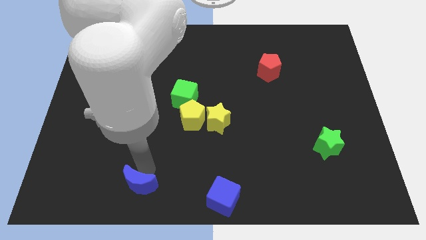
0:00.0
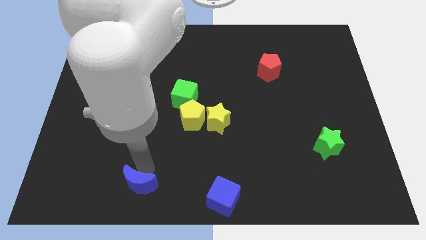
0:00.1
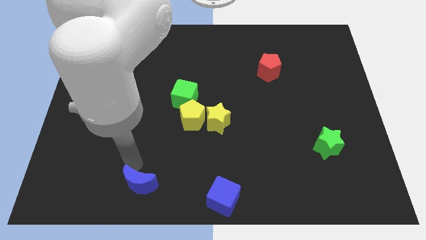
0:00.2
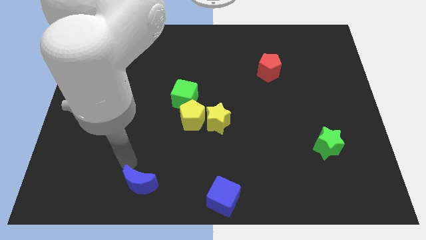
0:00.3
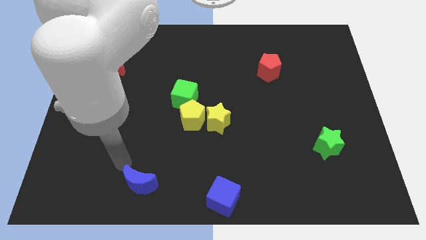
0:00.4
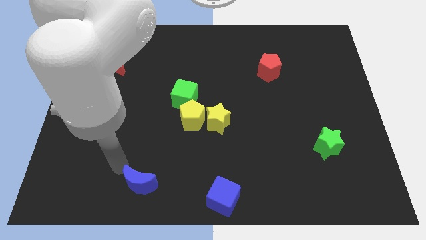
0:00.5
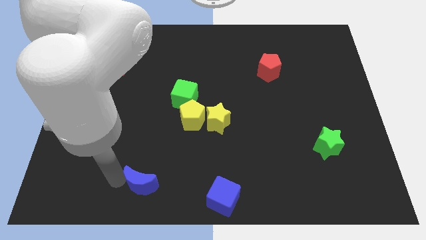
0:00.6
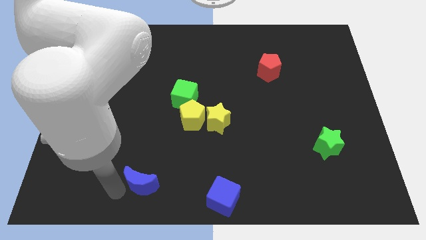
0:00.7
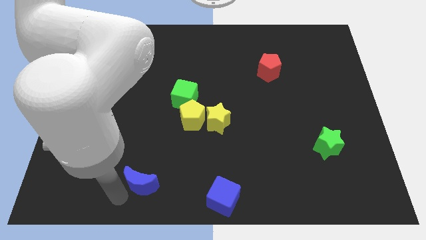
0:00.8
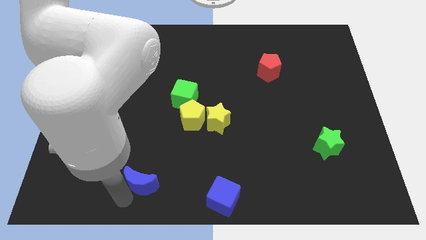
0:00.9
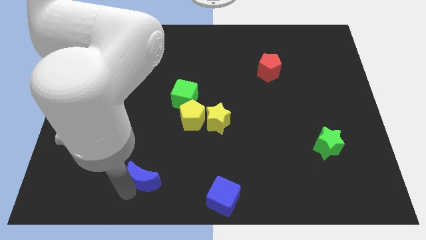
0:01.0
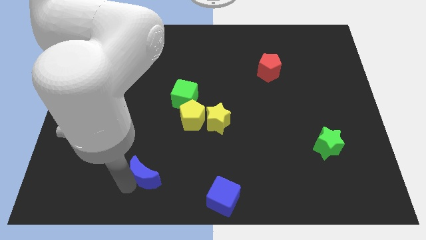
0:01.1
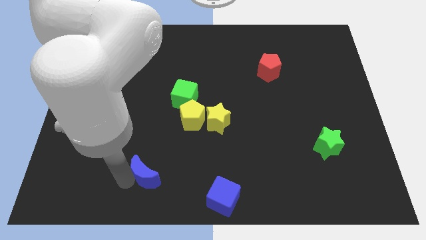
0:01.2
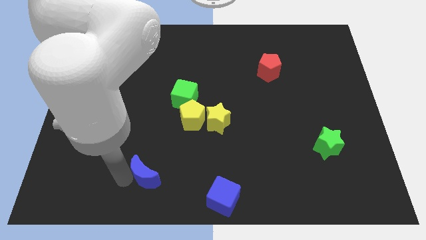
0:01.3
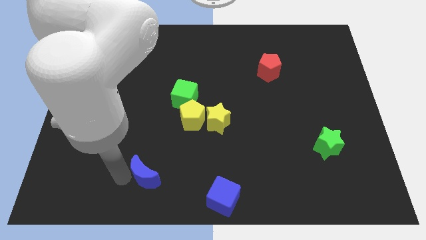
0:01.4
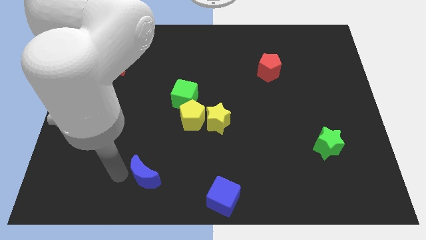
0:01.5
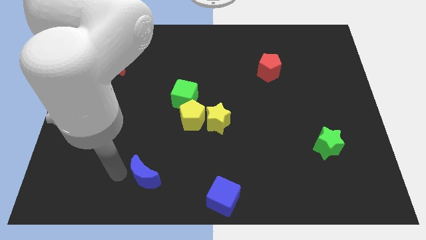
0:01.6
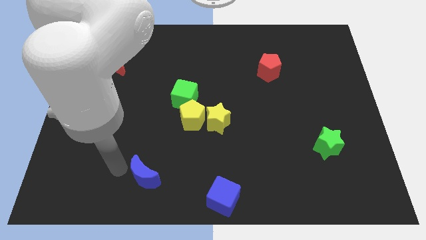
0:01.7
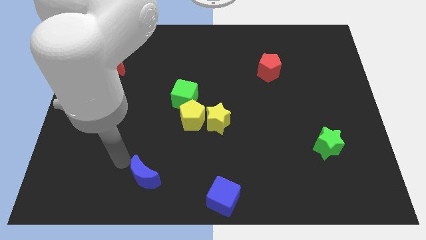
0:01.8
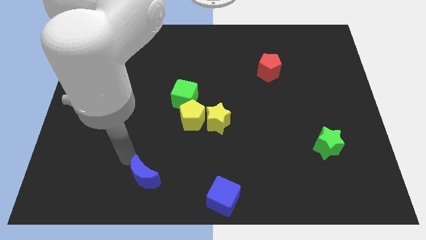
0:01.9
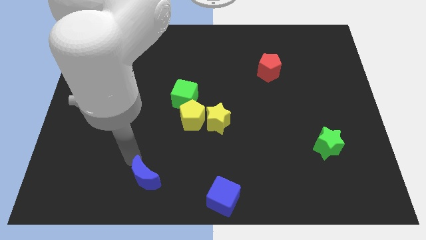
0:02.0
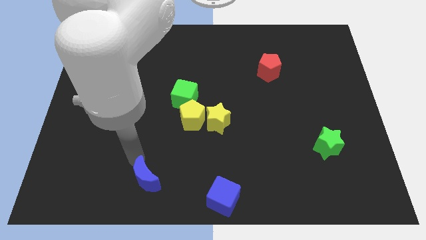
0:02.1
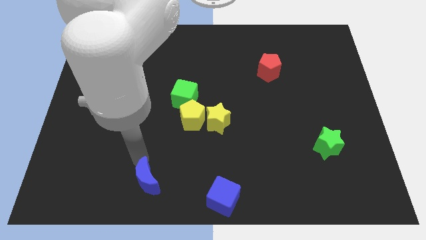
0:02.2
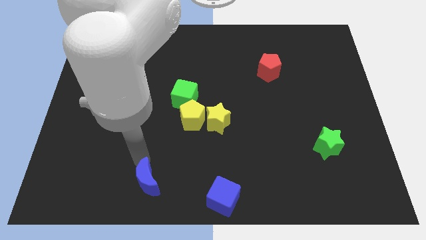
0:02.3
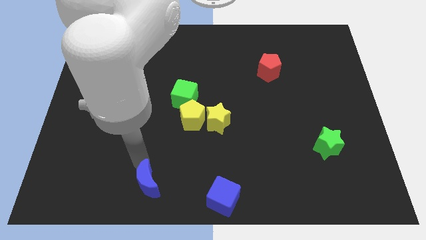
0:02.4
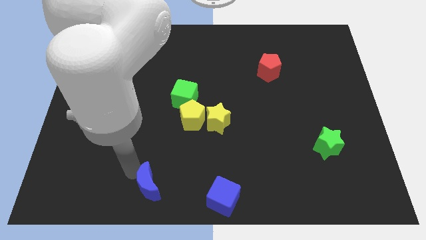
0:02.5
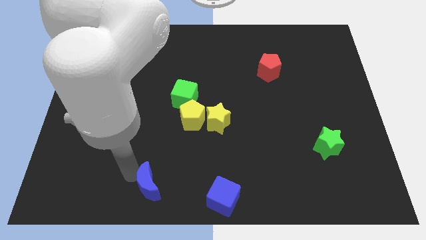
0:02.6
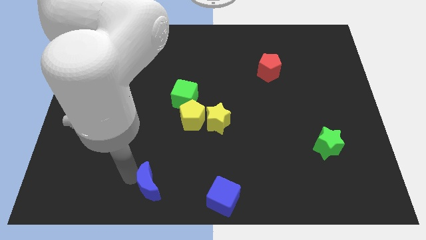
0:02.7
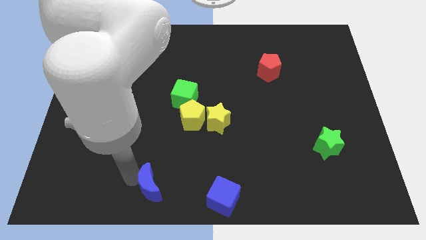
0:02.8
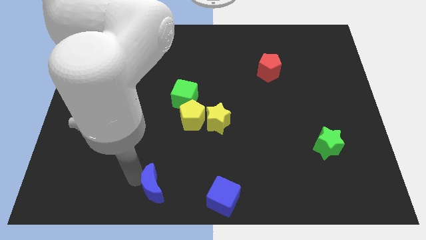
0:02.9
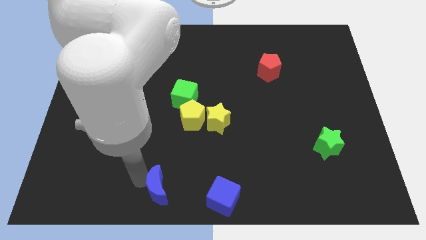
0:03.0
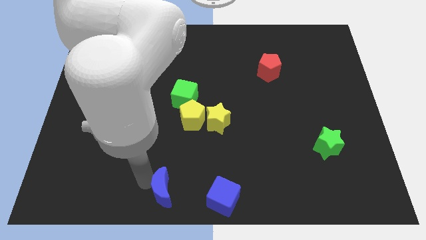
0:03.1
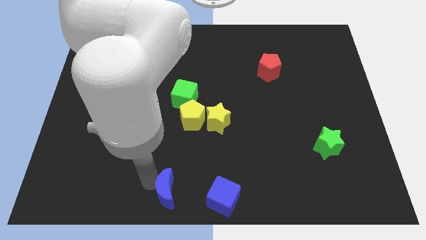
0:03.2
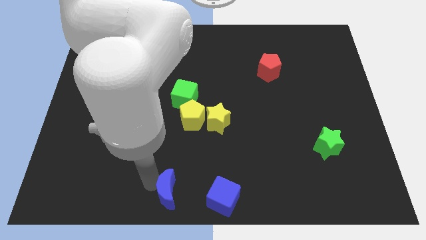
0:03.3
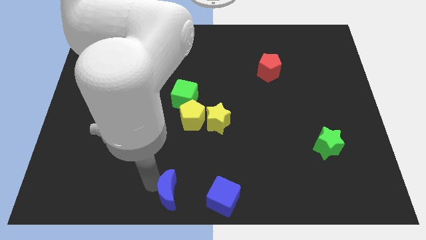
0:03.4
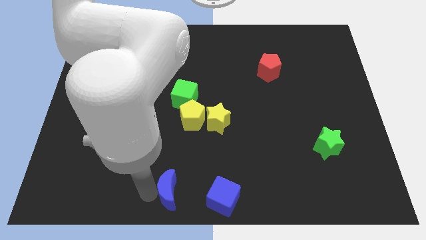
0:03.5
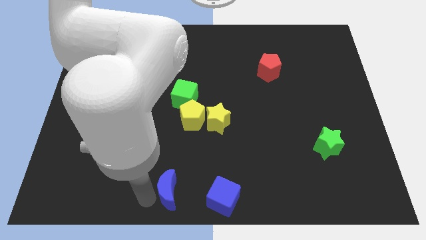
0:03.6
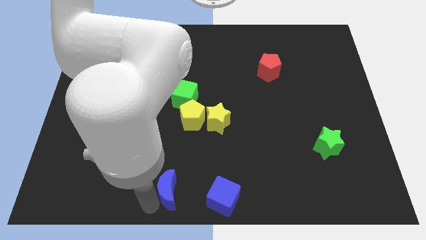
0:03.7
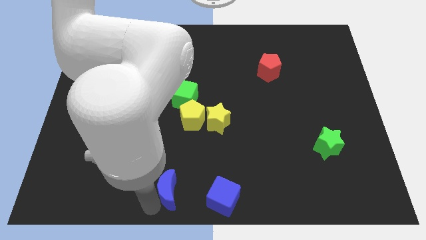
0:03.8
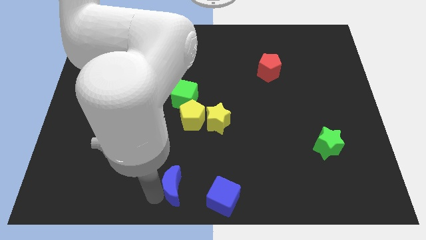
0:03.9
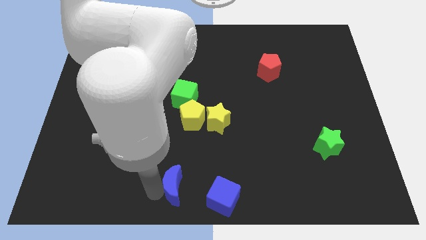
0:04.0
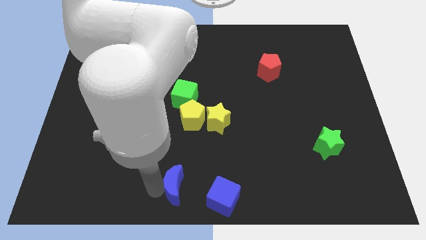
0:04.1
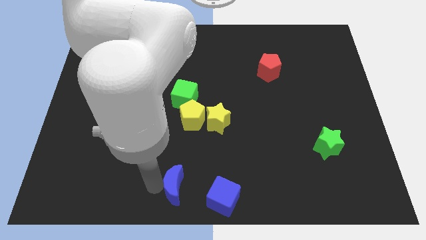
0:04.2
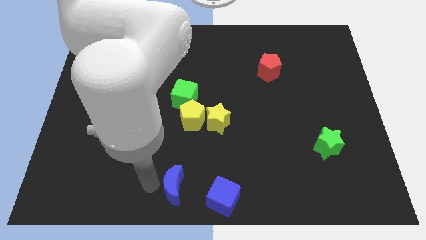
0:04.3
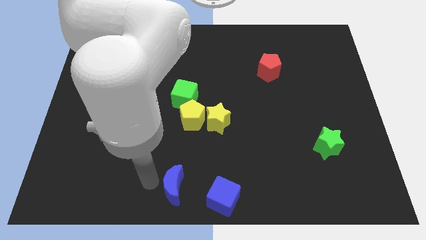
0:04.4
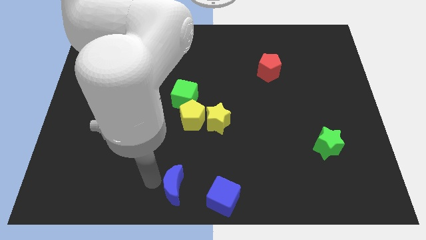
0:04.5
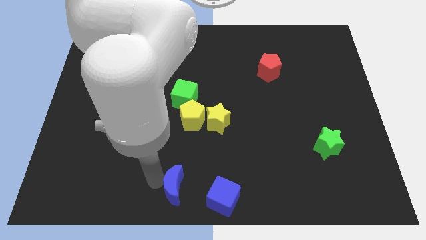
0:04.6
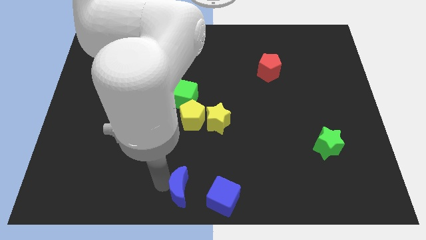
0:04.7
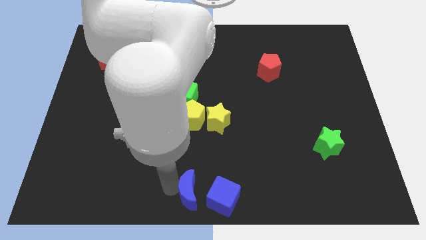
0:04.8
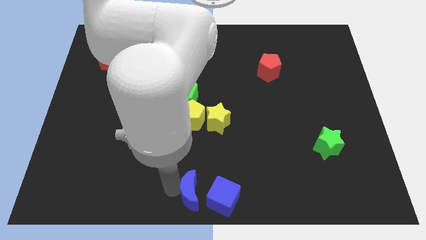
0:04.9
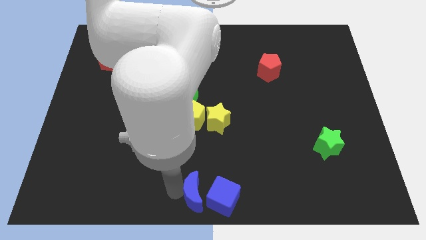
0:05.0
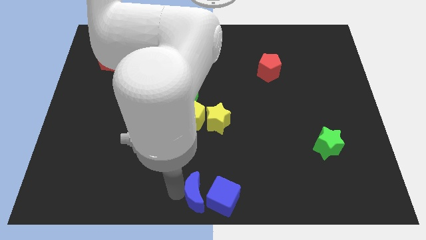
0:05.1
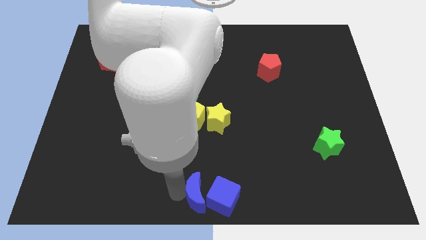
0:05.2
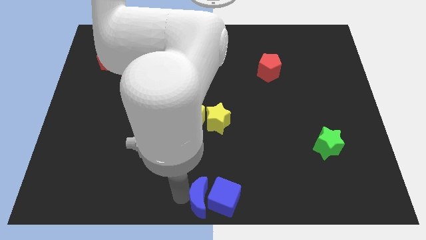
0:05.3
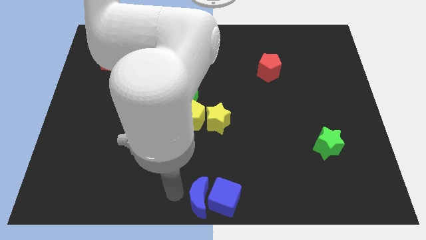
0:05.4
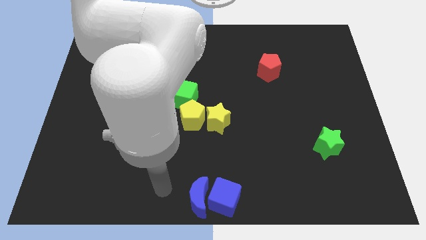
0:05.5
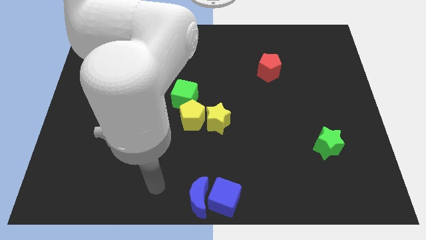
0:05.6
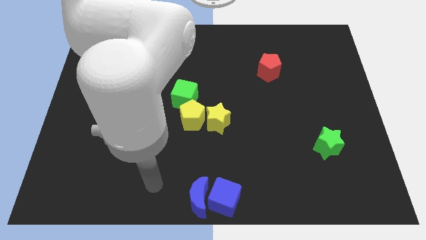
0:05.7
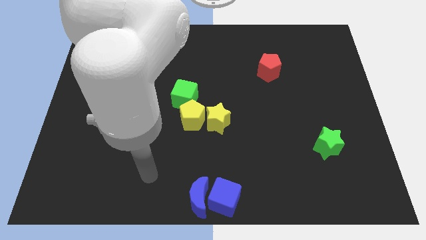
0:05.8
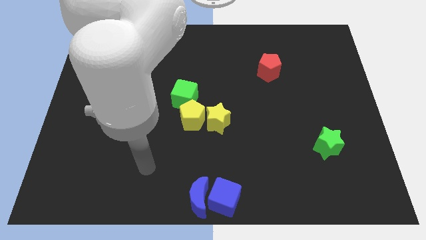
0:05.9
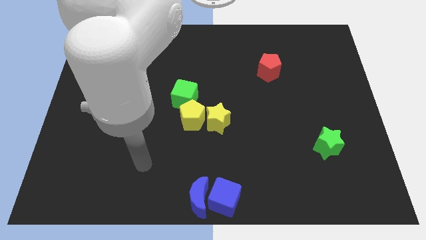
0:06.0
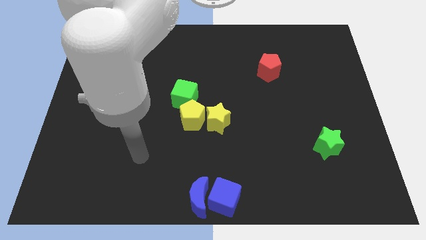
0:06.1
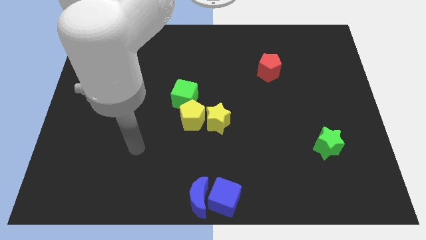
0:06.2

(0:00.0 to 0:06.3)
push the blue moon into the blue cube

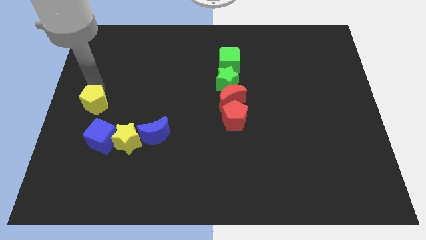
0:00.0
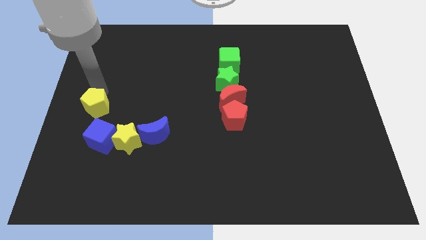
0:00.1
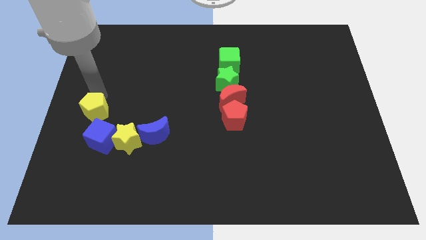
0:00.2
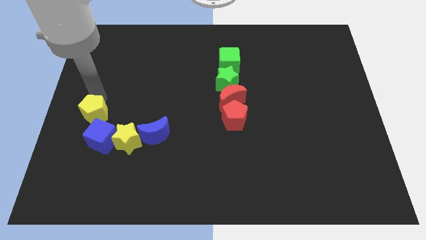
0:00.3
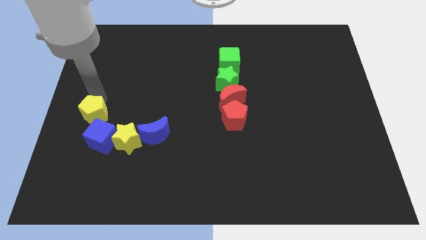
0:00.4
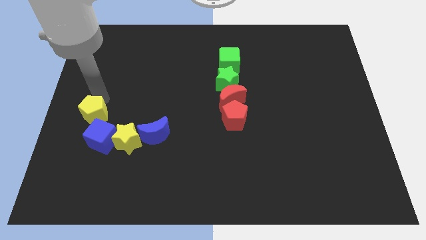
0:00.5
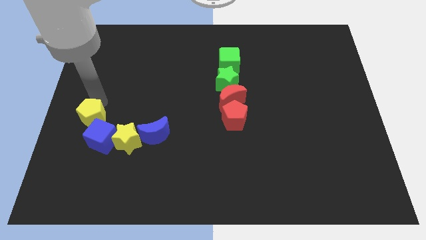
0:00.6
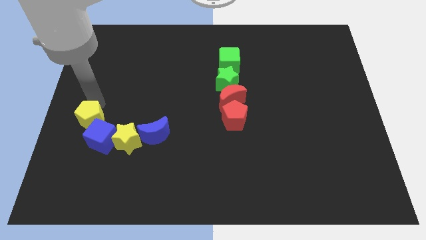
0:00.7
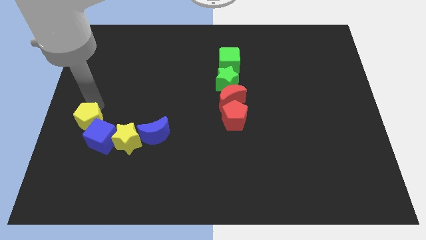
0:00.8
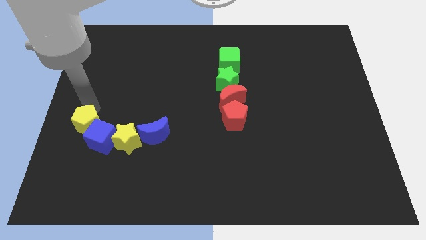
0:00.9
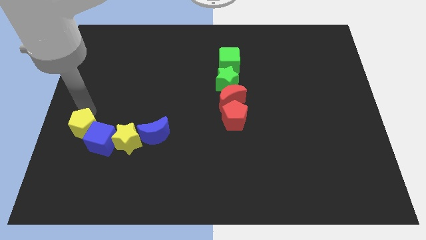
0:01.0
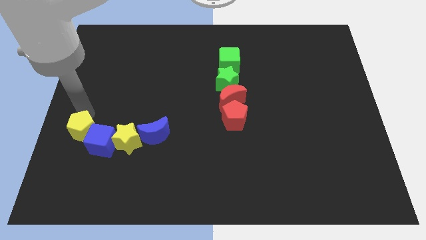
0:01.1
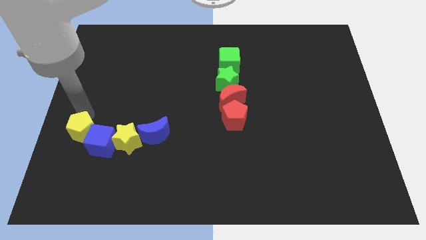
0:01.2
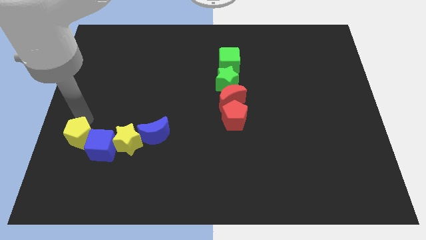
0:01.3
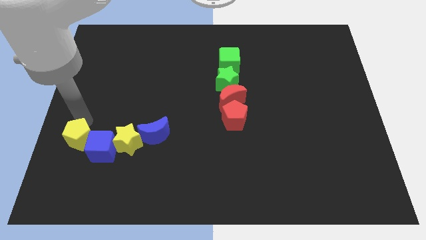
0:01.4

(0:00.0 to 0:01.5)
move the yellow pentagon into the blue cube

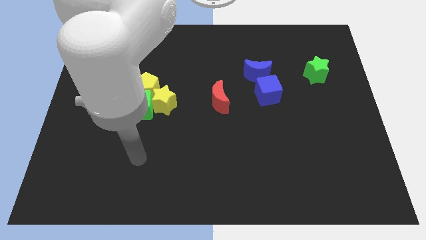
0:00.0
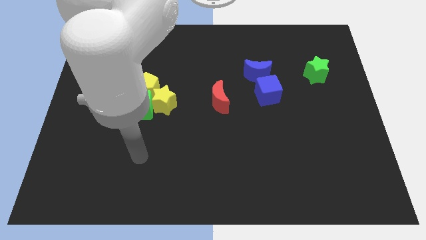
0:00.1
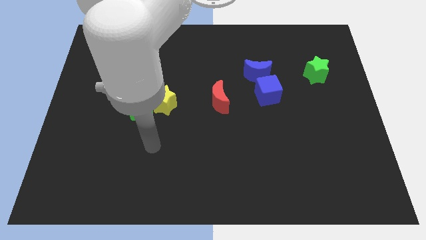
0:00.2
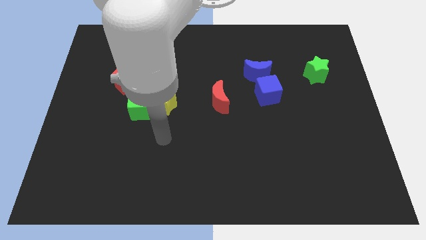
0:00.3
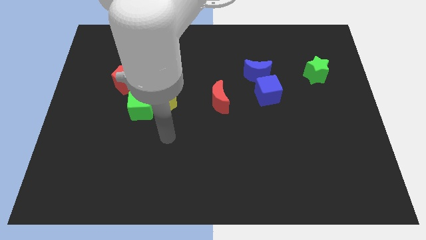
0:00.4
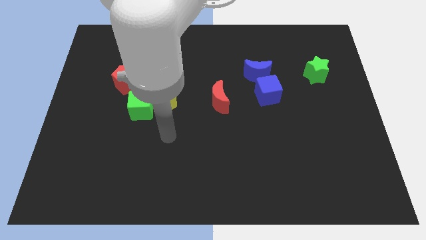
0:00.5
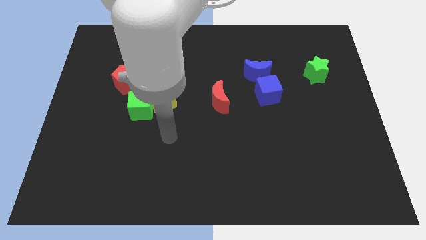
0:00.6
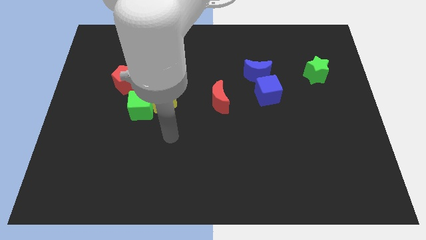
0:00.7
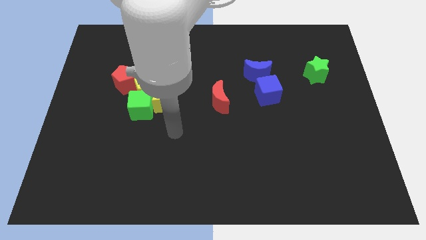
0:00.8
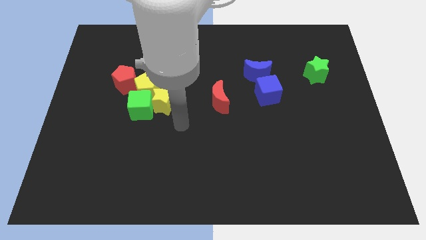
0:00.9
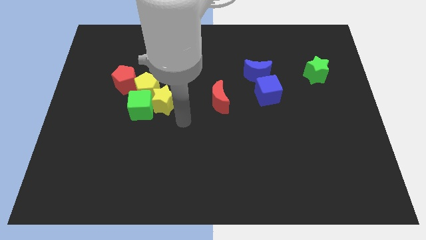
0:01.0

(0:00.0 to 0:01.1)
move your arm towards the center of the table

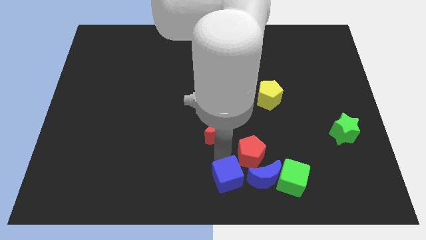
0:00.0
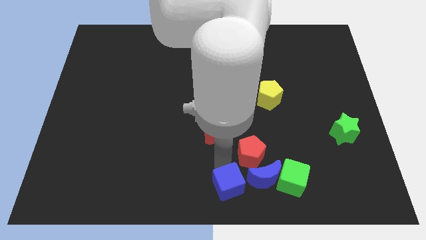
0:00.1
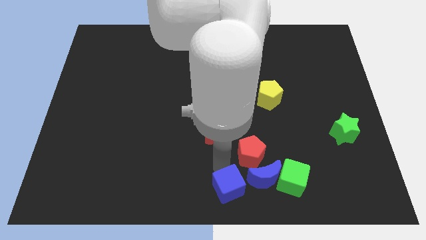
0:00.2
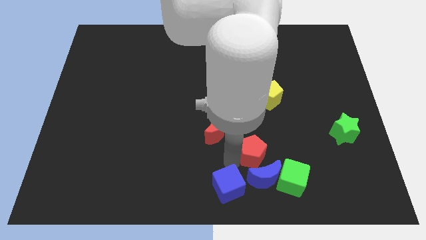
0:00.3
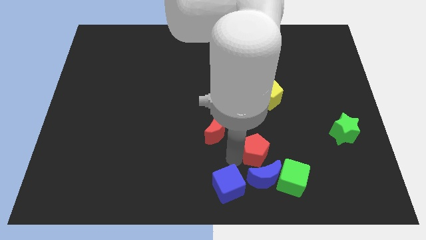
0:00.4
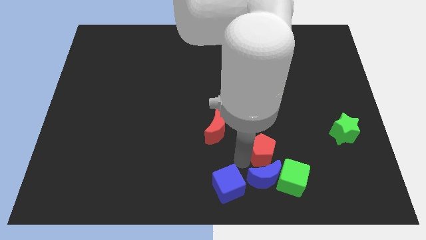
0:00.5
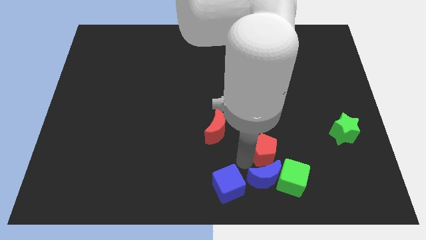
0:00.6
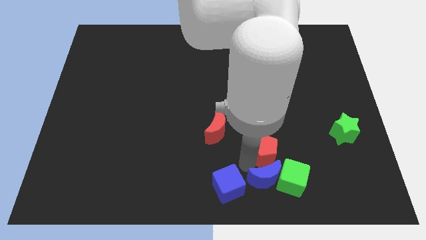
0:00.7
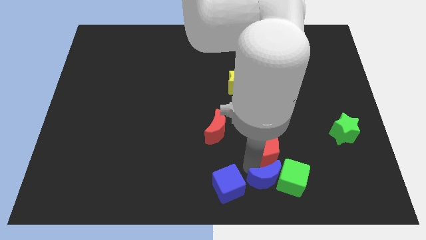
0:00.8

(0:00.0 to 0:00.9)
separate blue cube from the red pentagon
